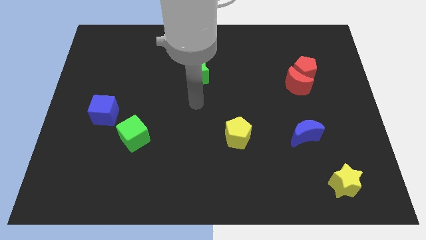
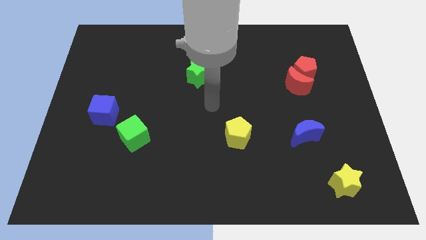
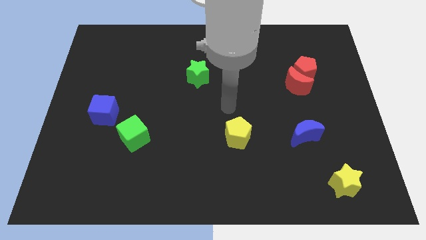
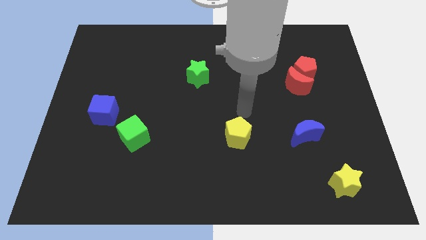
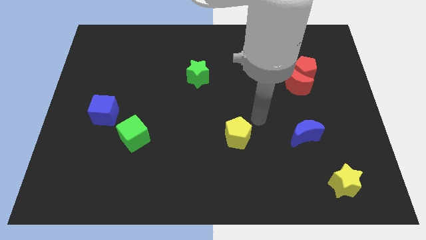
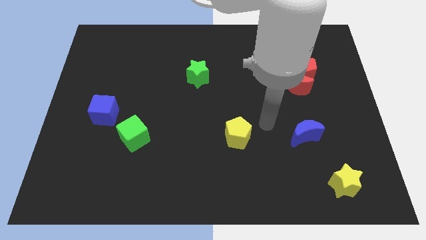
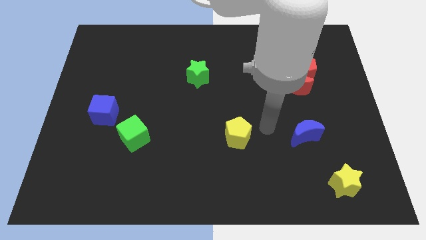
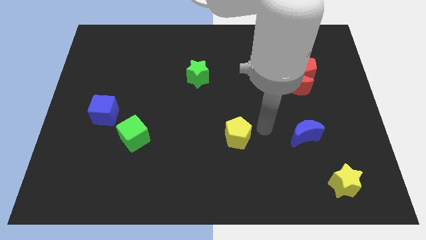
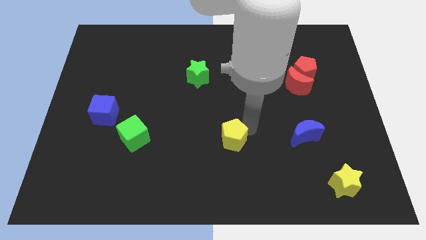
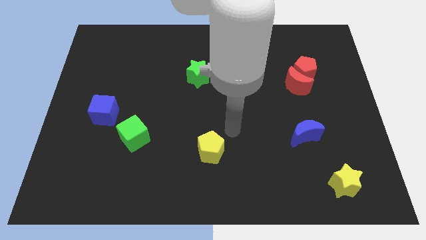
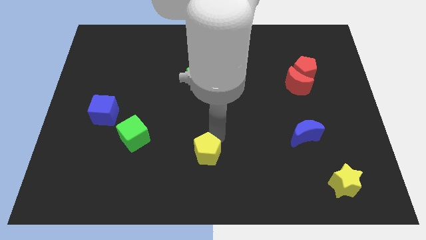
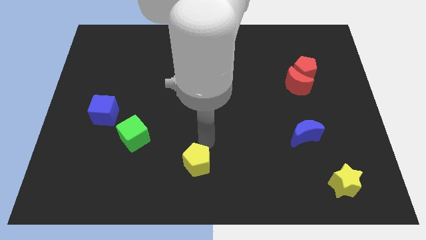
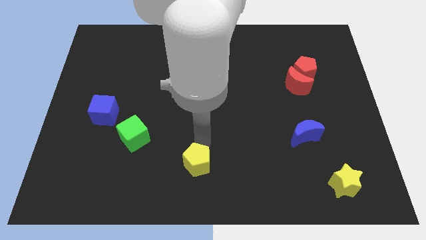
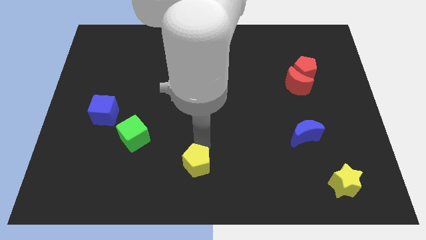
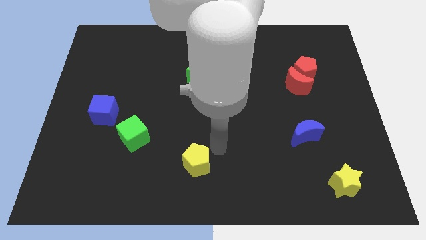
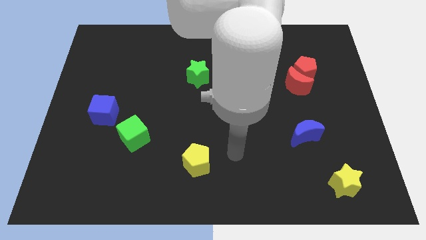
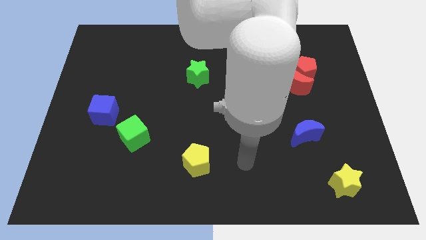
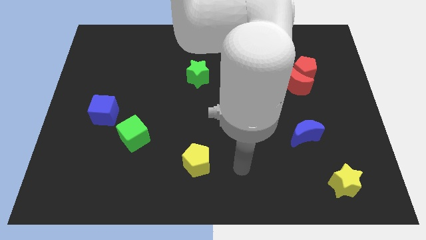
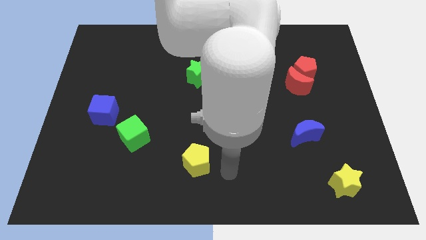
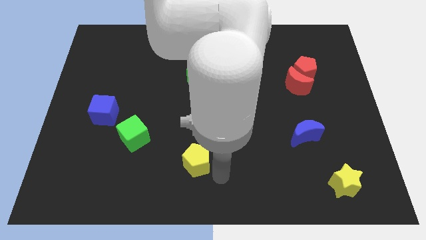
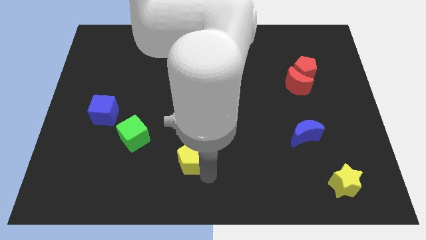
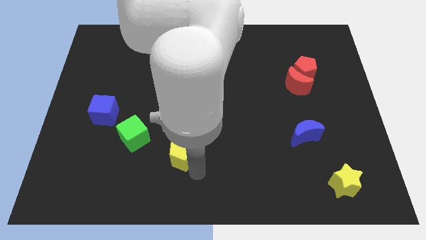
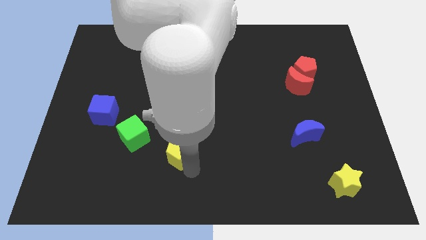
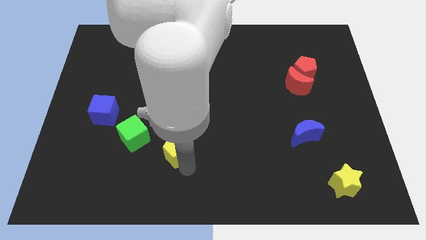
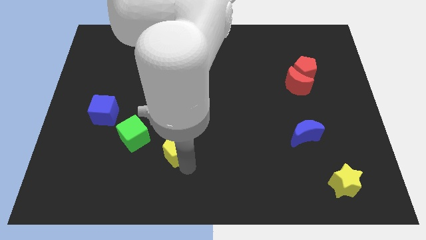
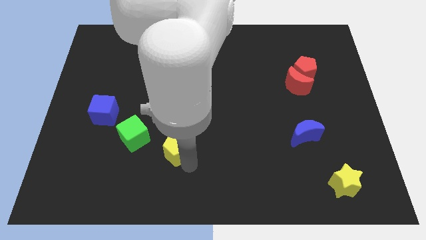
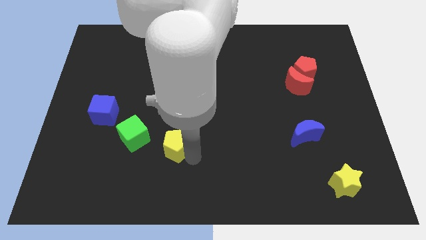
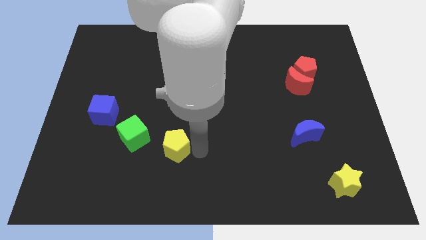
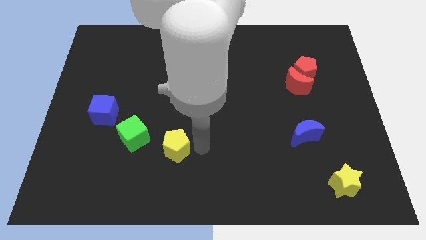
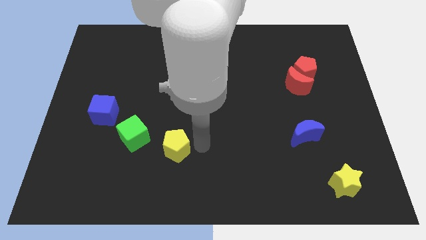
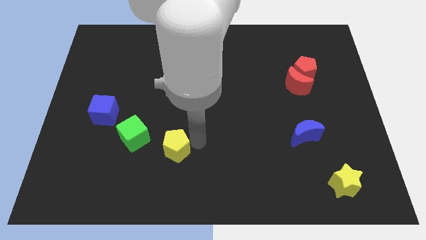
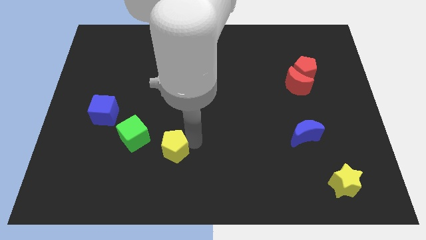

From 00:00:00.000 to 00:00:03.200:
drag the yellow pentagon towards the green cube

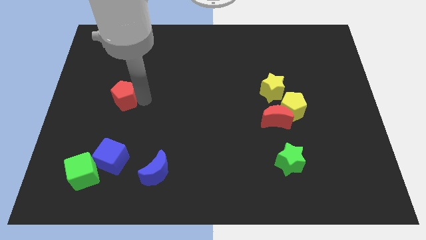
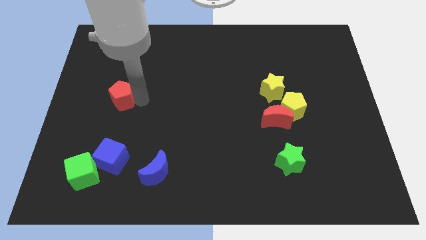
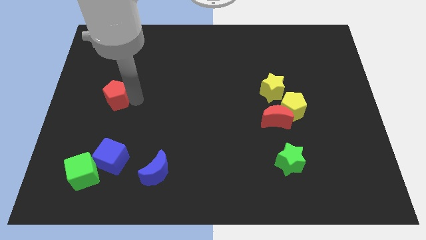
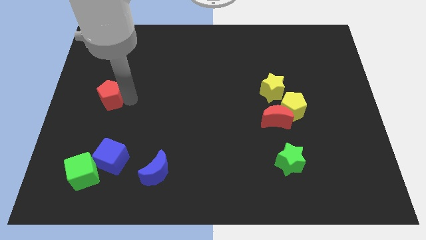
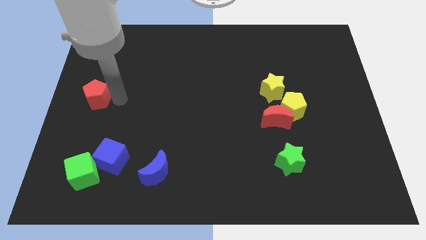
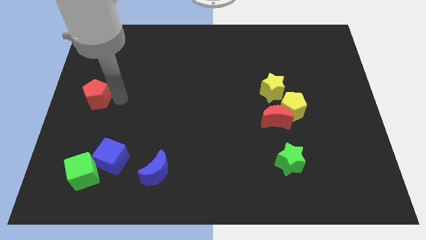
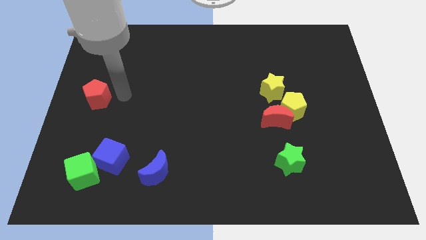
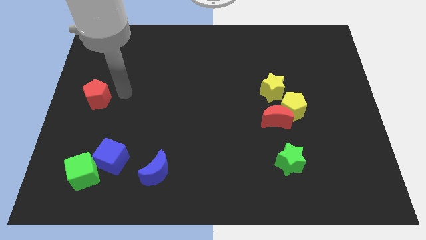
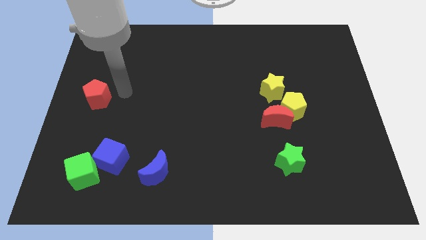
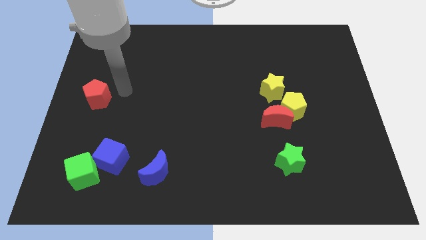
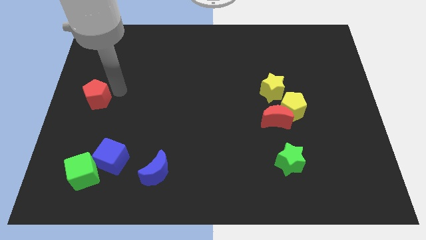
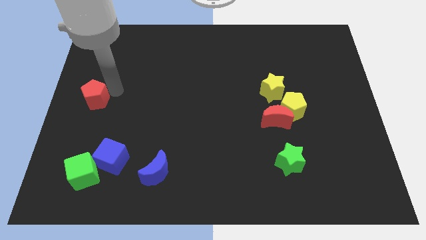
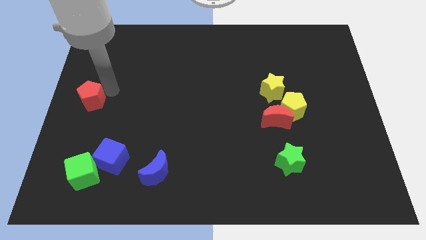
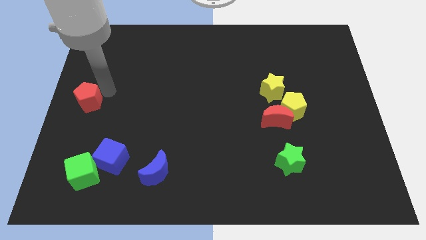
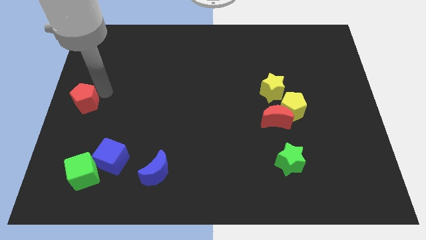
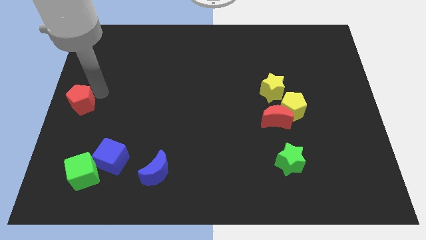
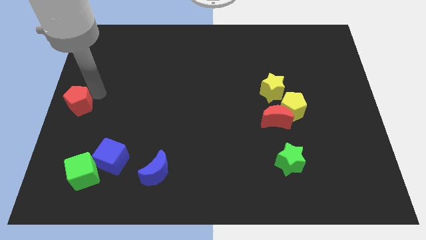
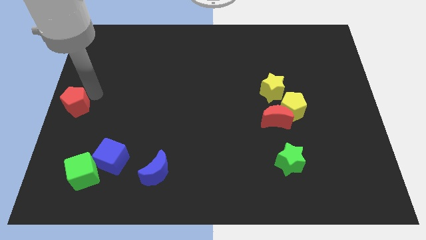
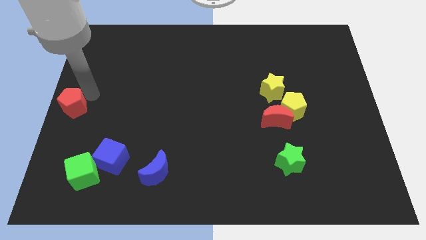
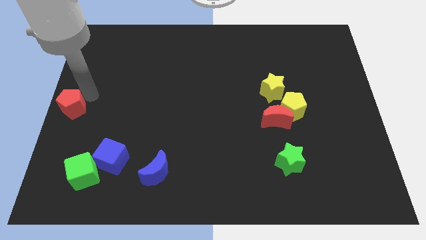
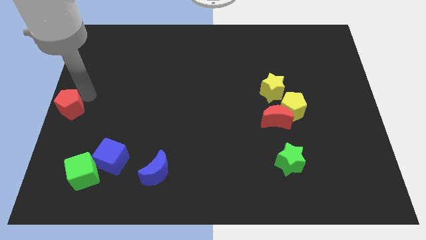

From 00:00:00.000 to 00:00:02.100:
push red pentagon to the center left

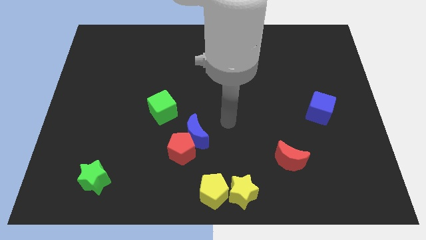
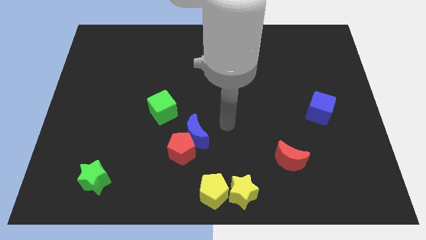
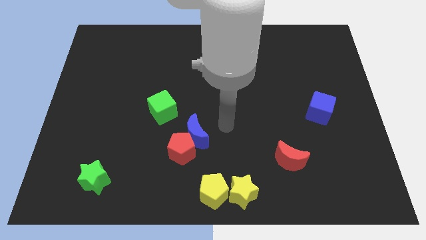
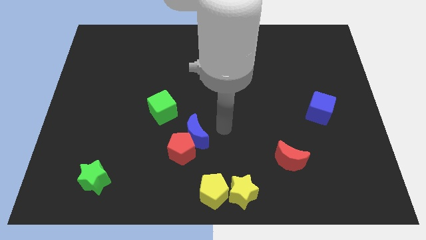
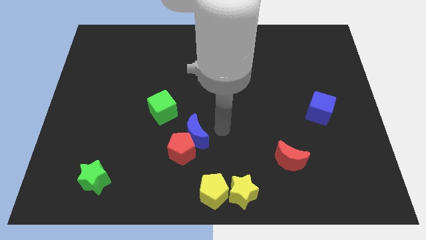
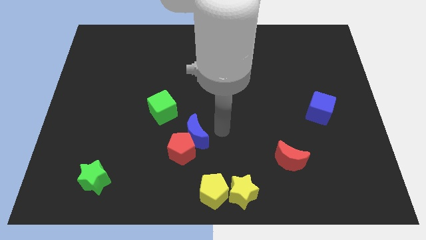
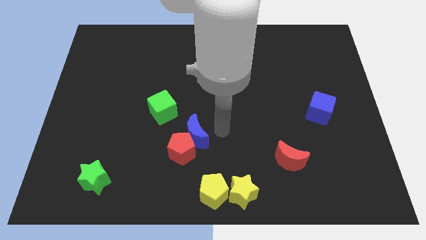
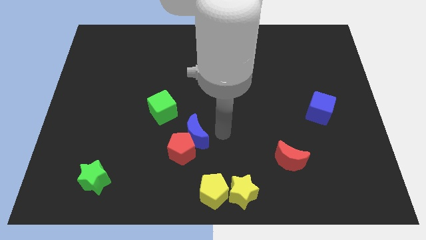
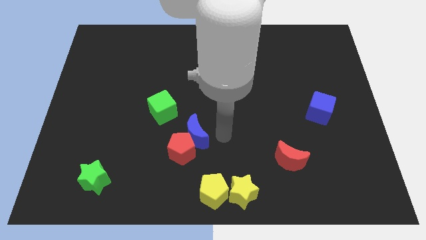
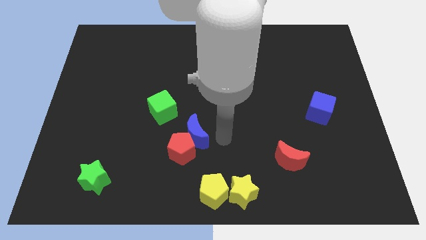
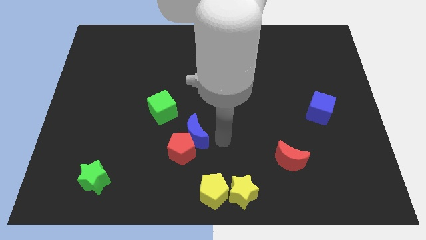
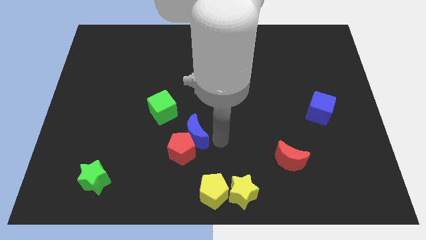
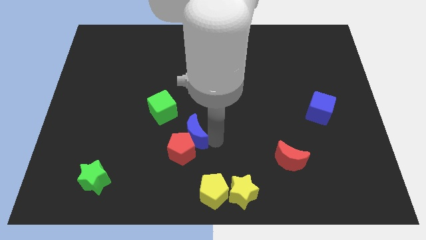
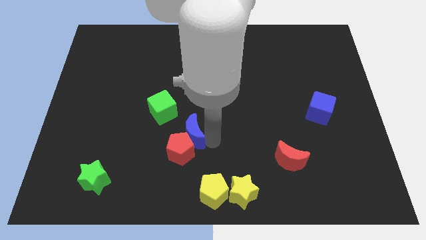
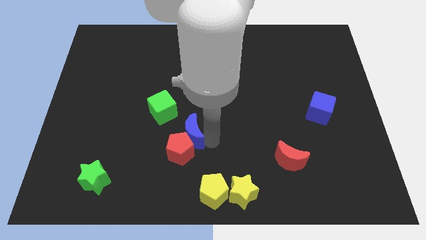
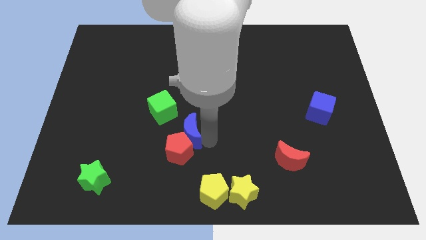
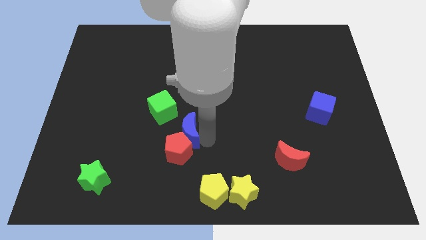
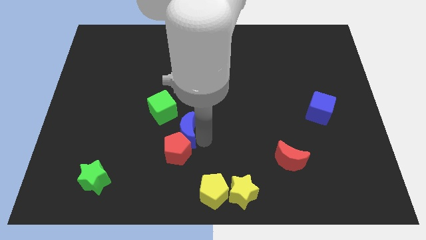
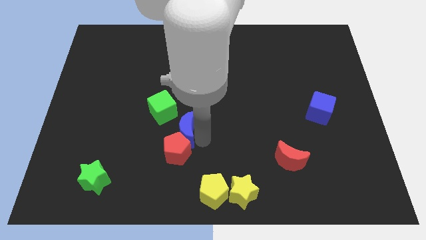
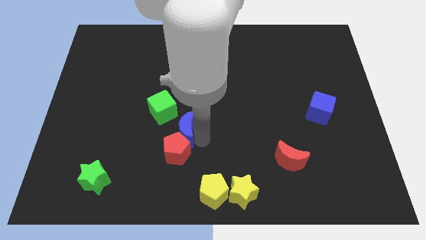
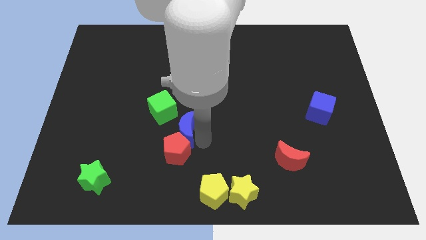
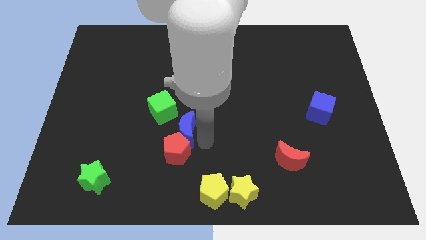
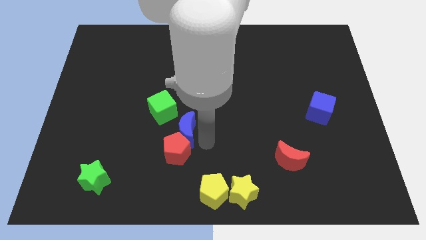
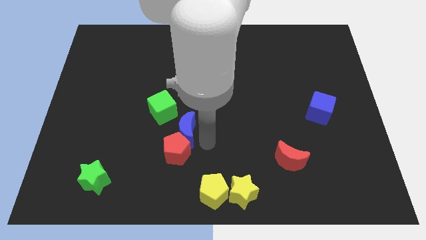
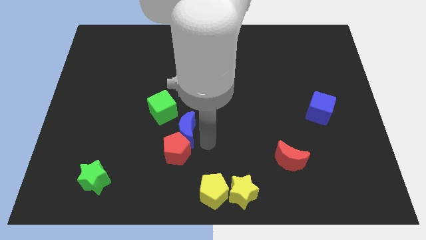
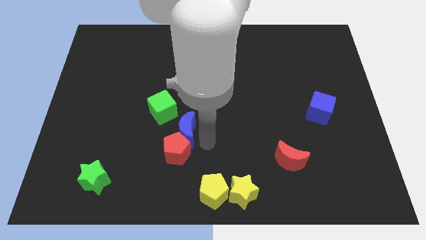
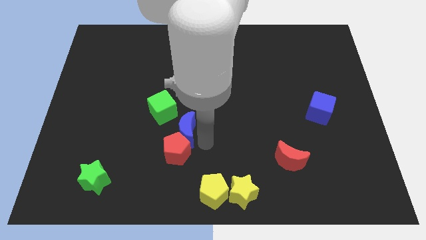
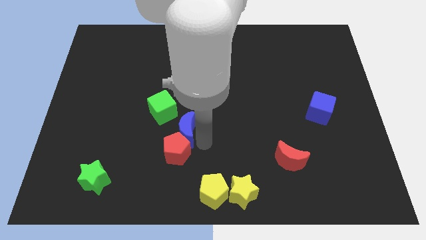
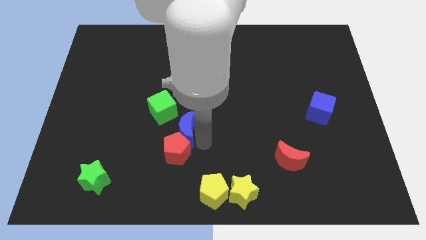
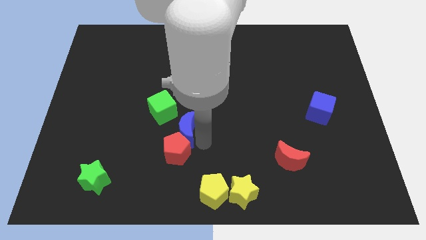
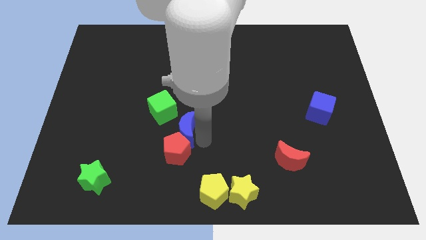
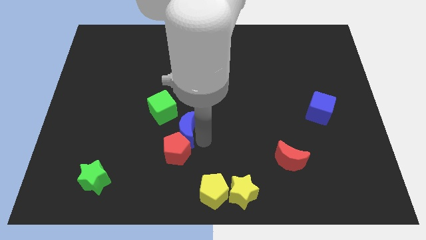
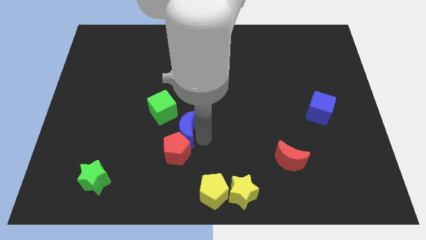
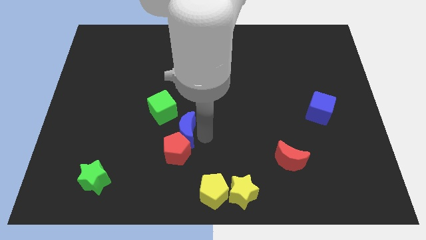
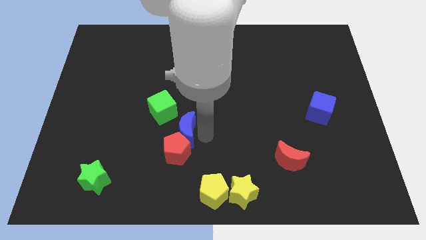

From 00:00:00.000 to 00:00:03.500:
push the red pentagon with the blue moon
